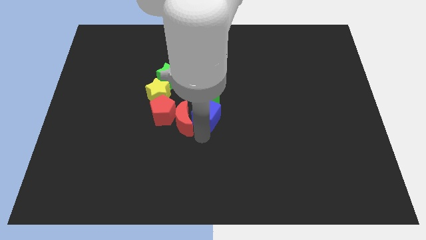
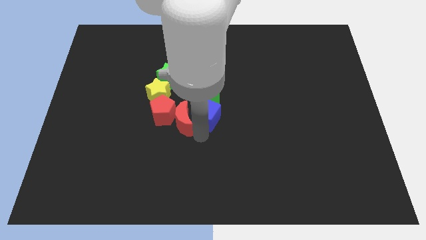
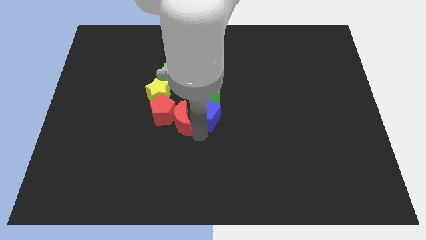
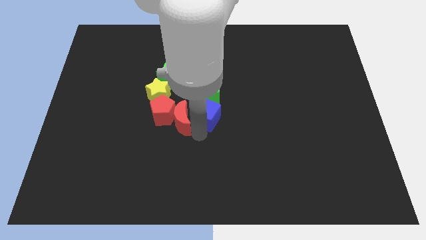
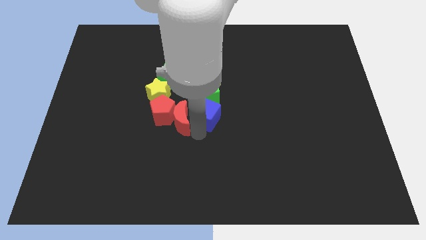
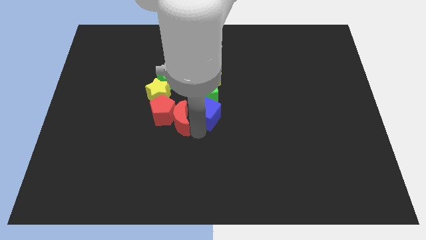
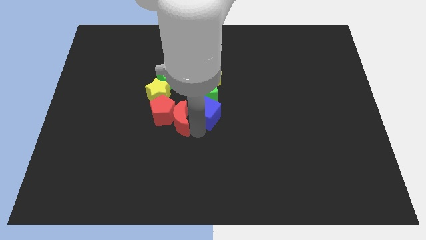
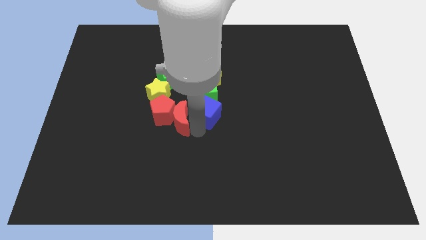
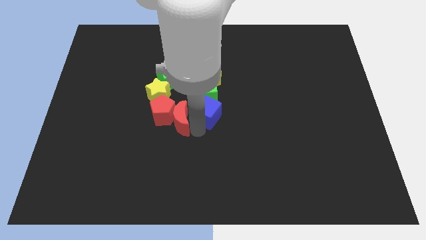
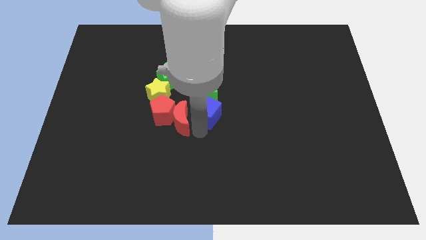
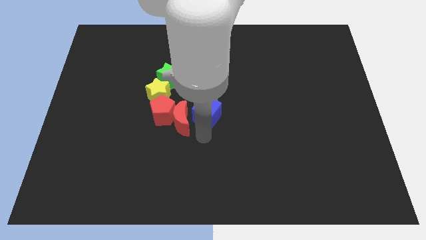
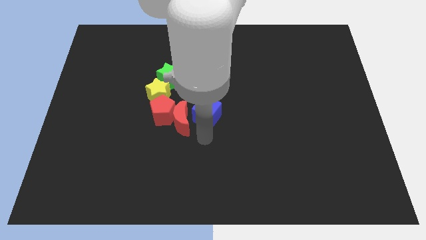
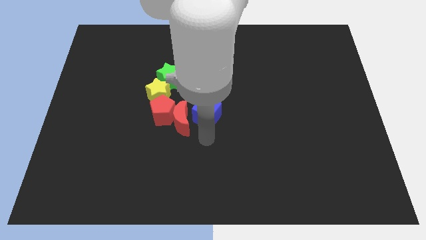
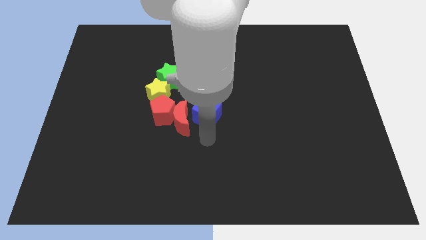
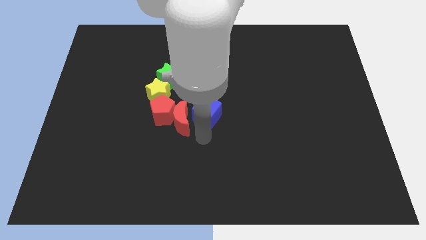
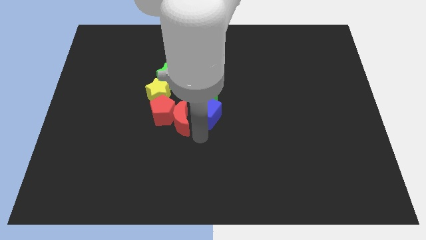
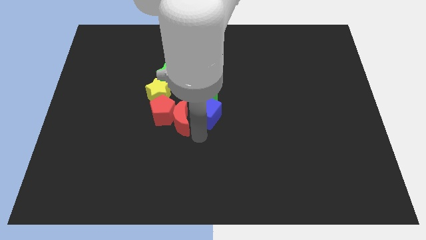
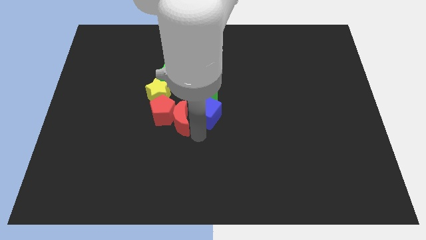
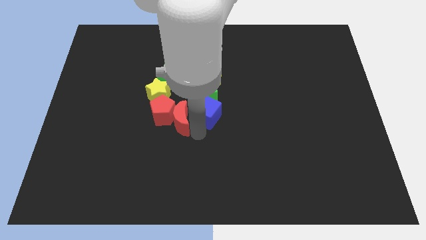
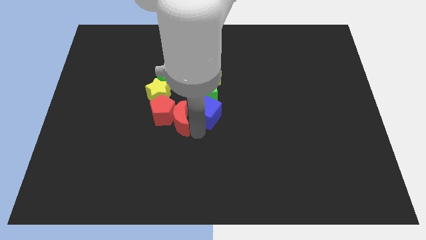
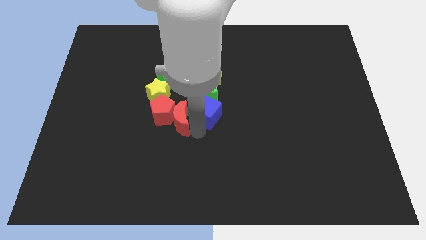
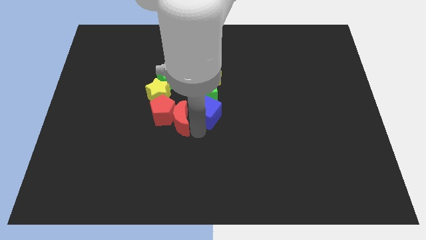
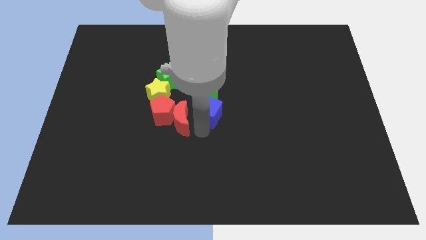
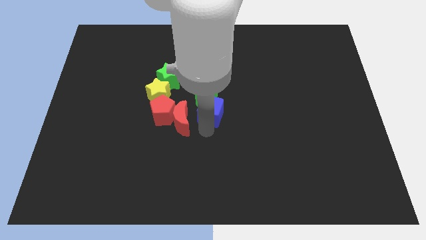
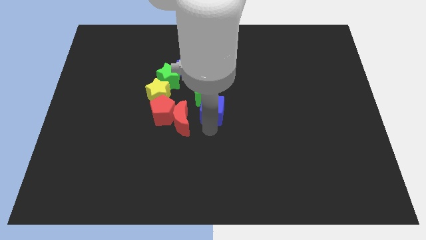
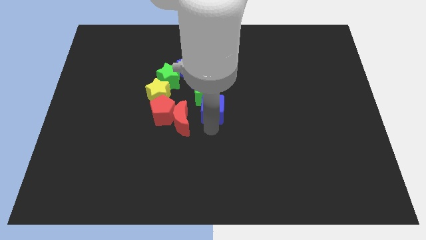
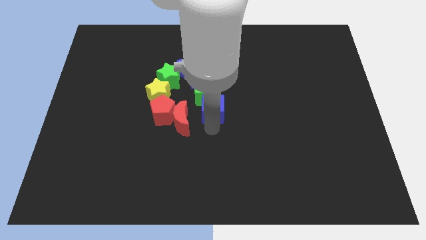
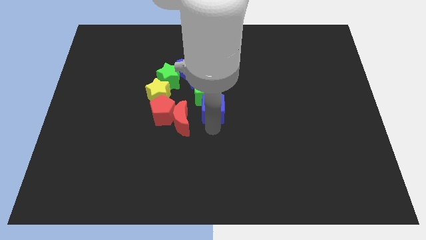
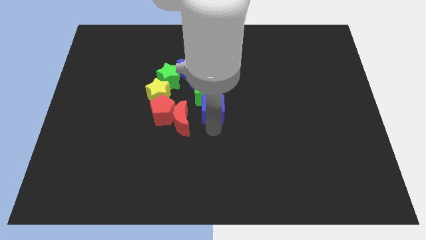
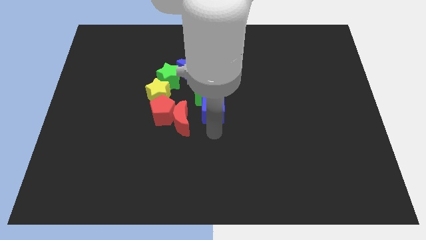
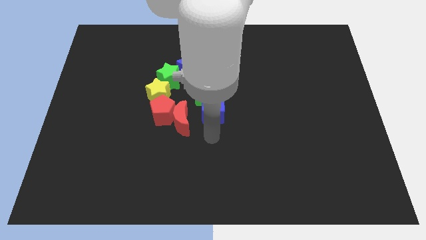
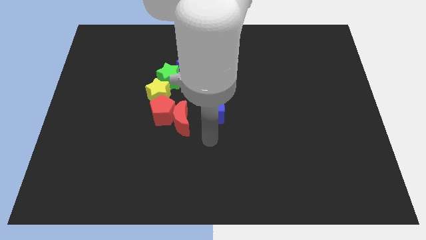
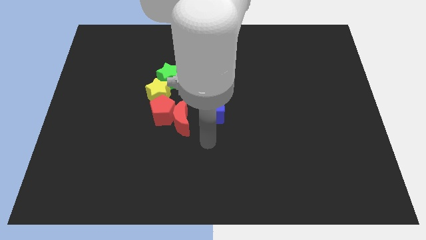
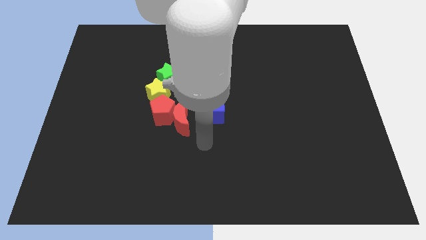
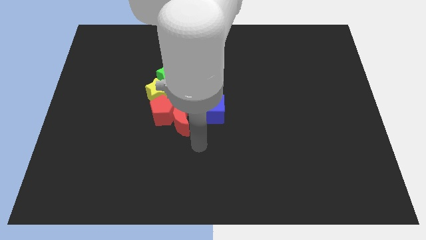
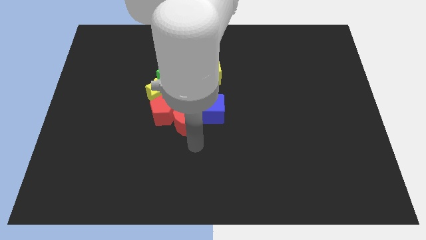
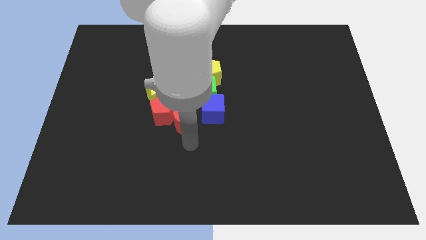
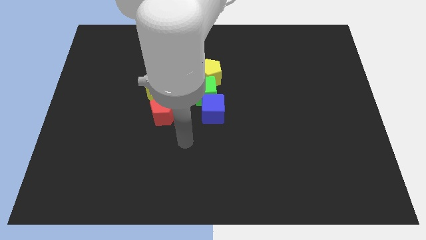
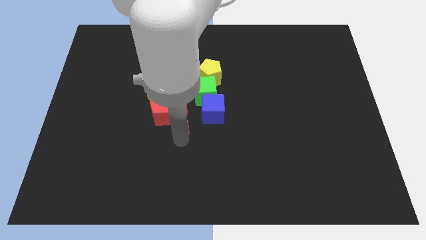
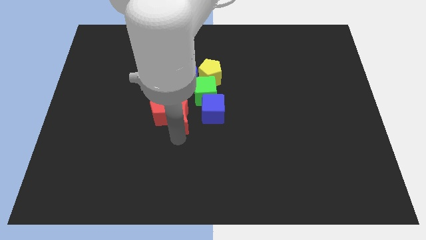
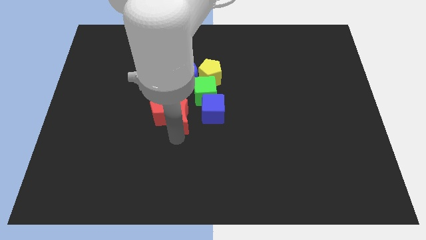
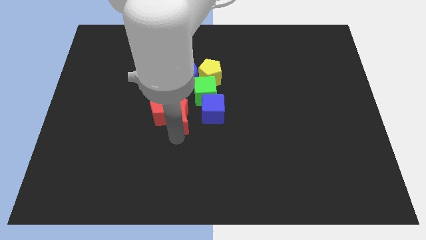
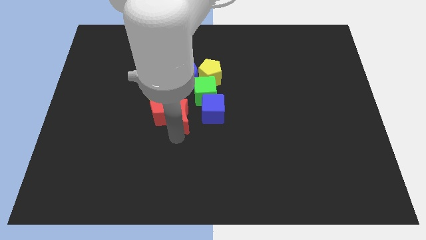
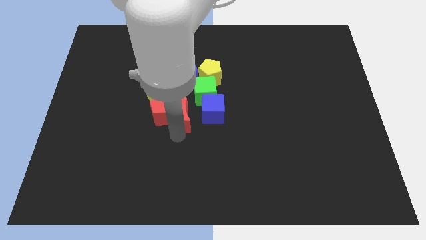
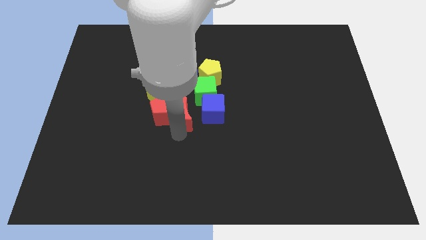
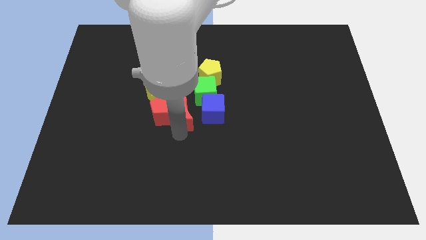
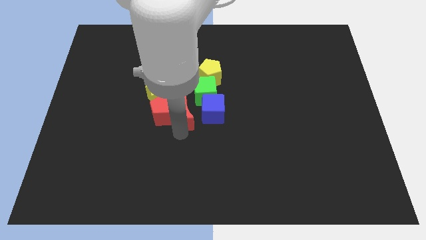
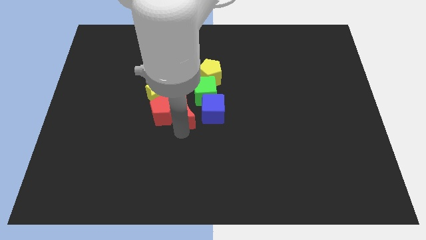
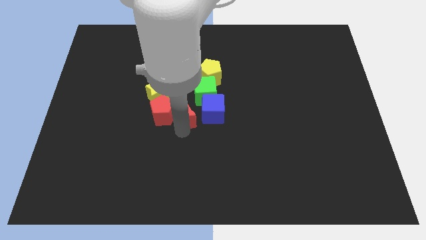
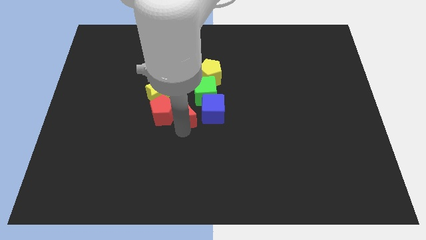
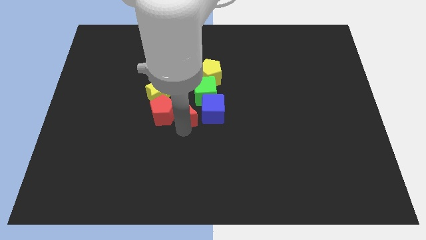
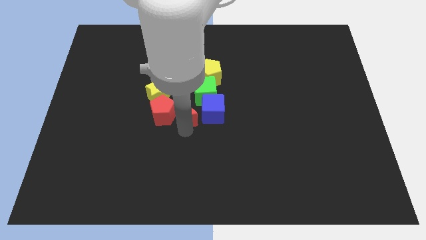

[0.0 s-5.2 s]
push the blue cube and red crescent parallel right to the red pentagon

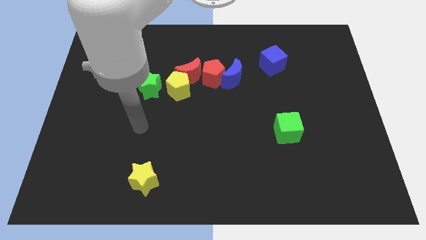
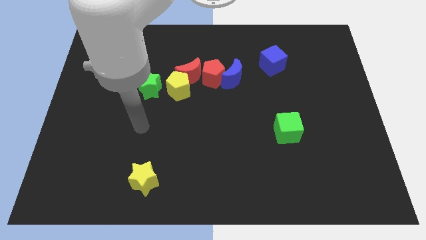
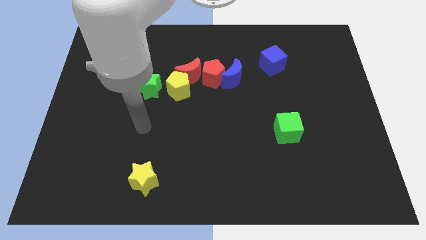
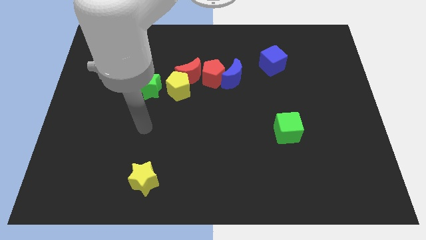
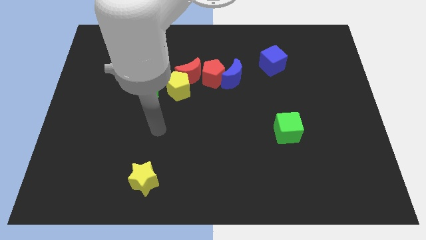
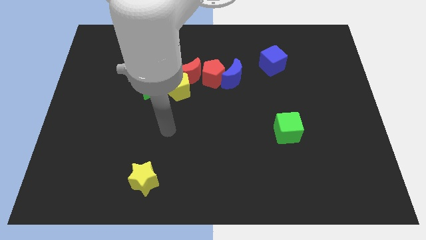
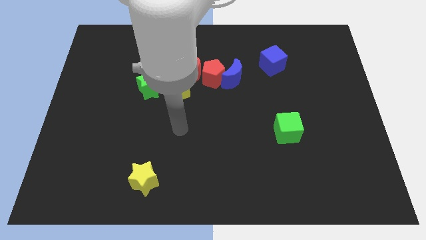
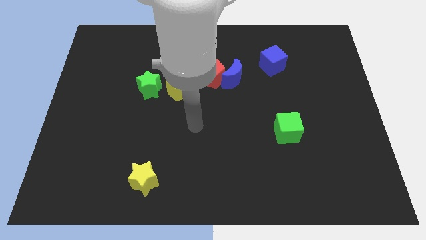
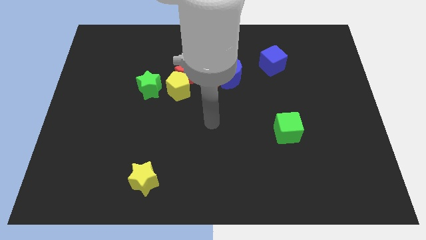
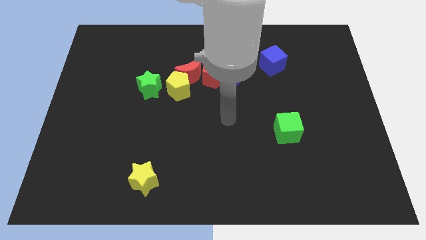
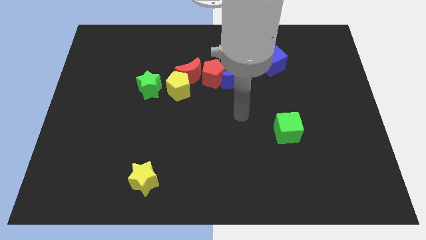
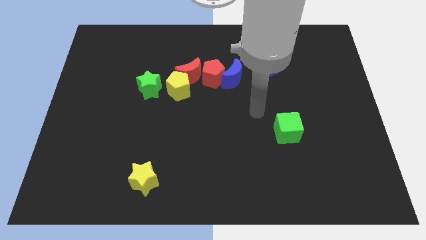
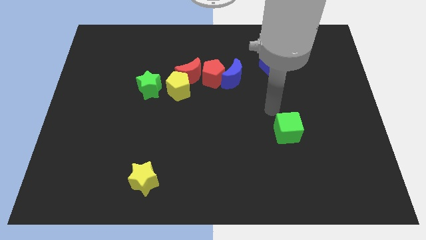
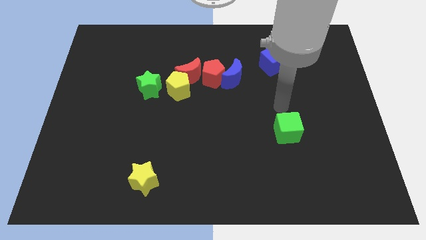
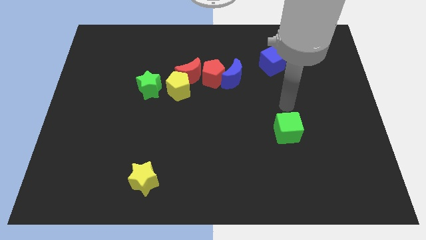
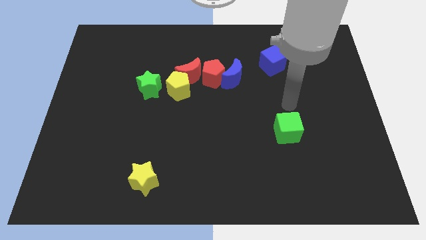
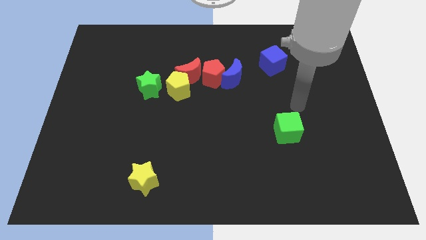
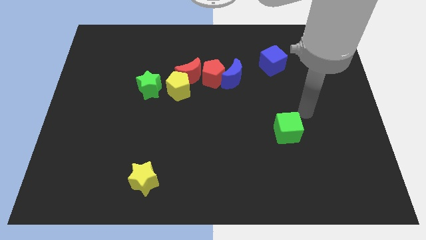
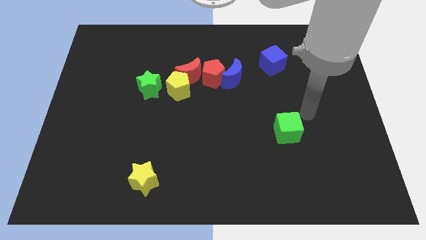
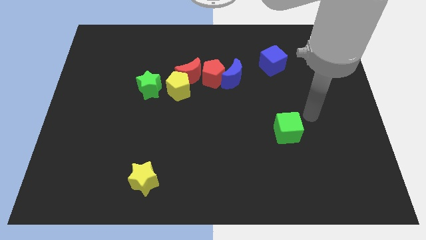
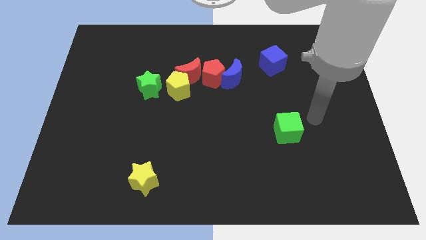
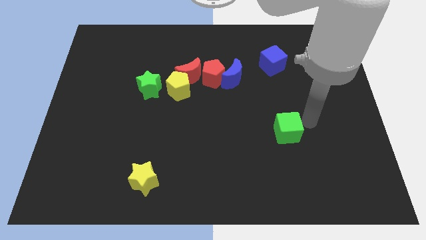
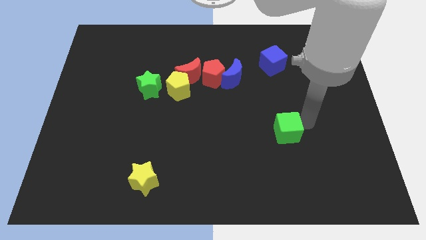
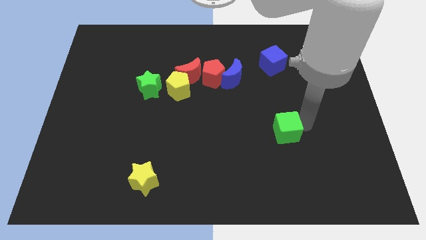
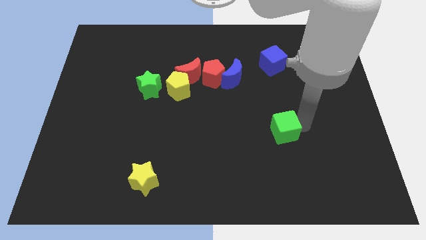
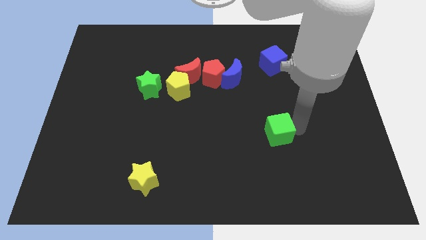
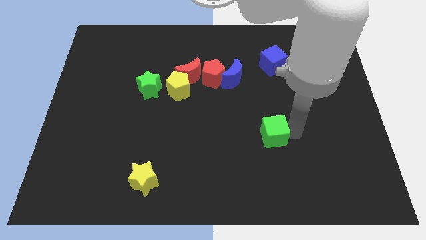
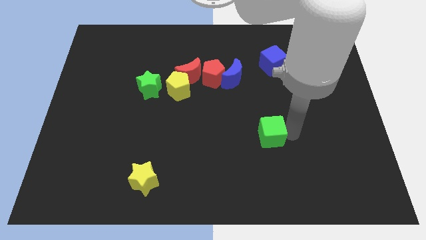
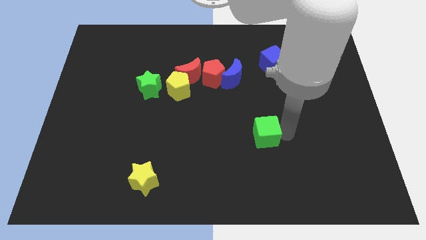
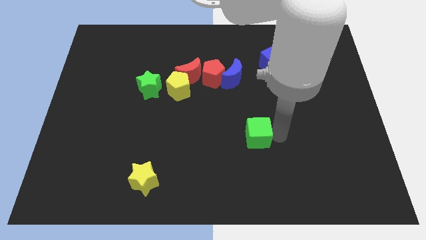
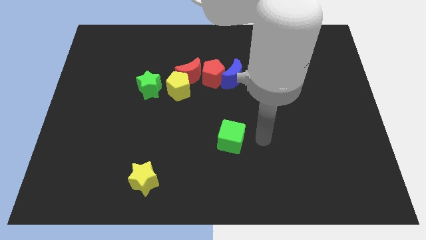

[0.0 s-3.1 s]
push the green cube to the bottom of the blue crescent

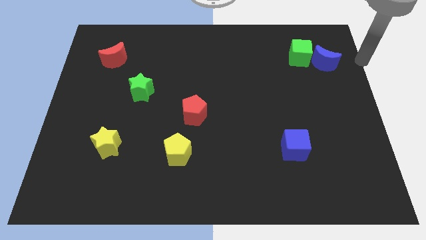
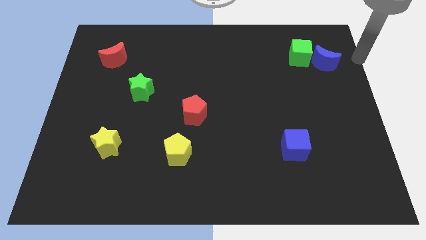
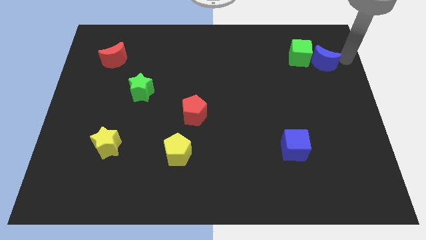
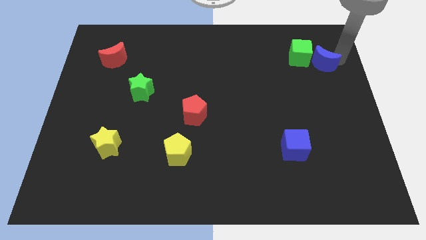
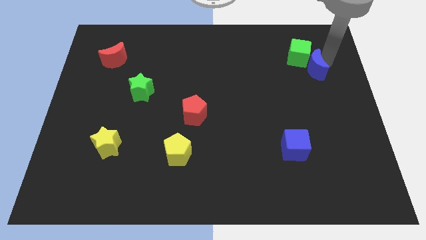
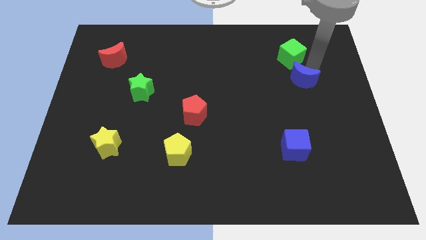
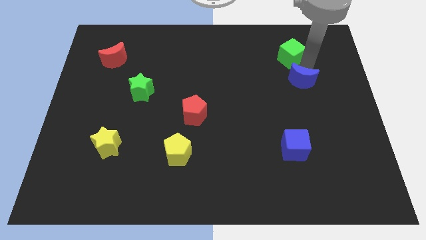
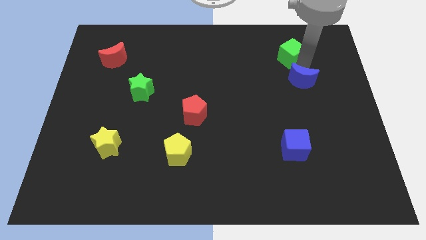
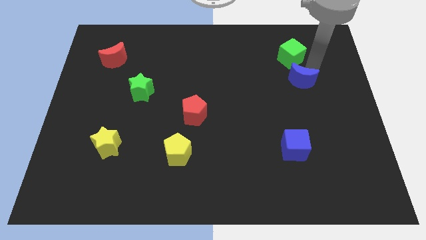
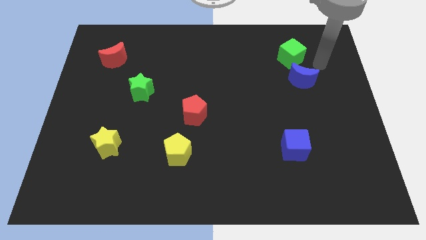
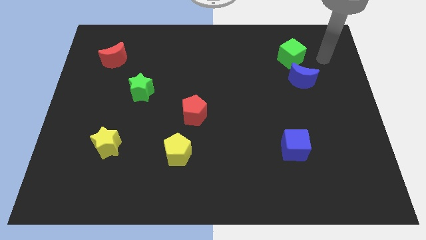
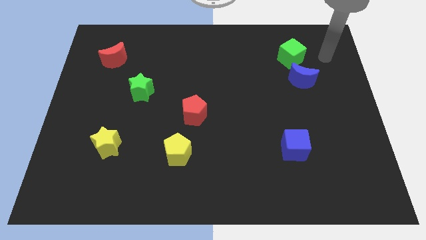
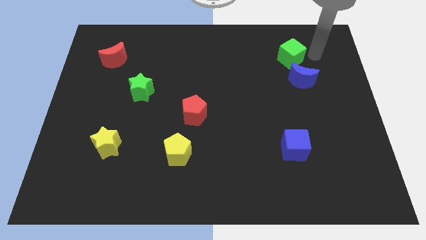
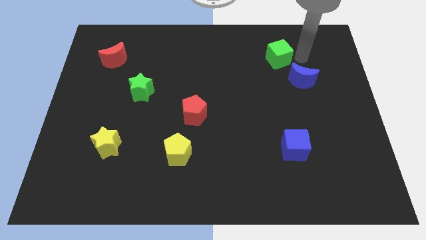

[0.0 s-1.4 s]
separate the green cube from blue crescent
